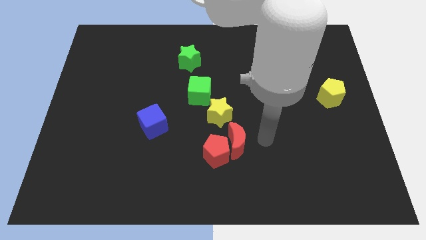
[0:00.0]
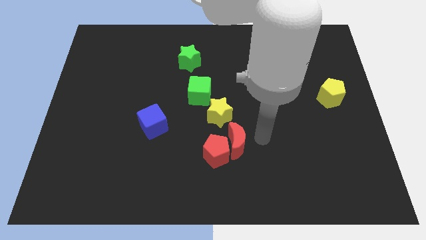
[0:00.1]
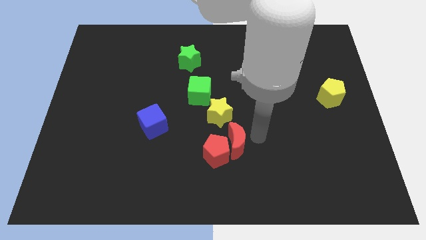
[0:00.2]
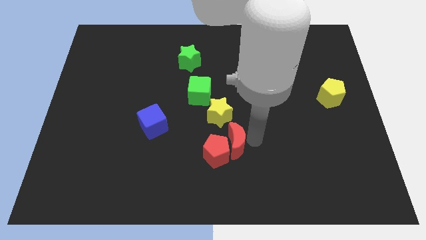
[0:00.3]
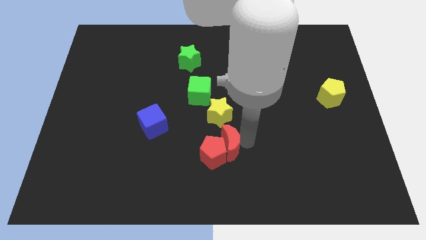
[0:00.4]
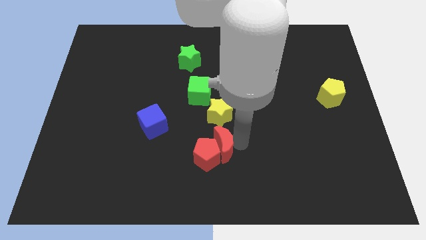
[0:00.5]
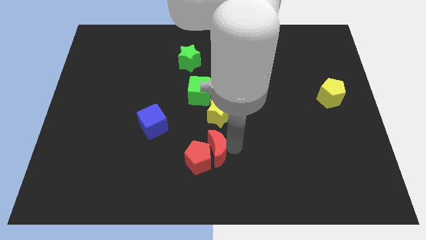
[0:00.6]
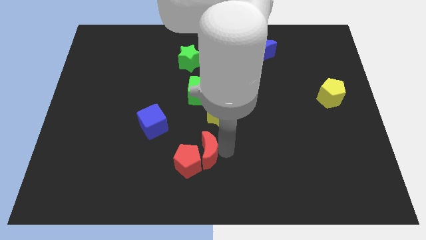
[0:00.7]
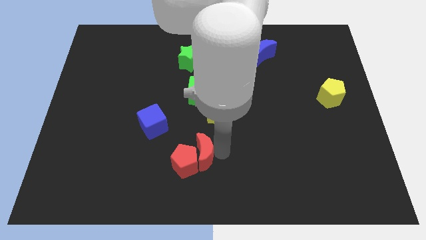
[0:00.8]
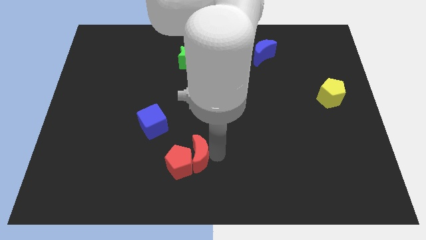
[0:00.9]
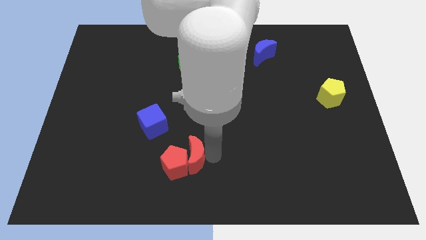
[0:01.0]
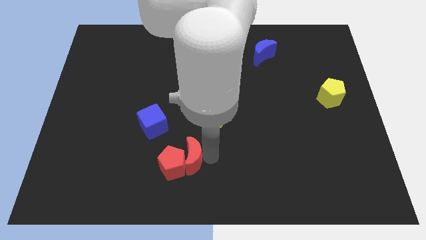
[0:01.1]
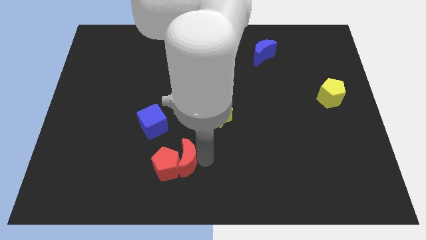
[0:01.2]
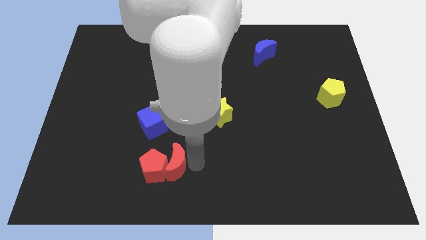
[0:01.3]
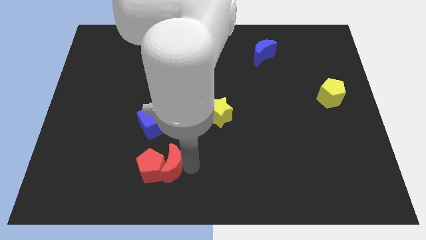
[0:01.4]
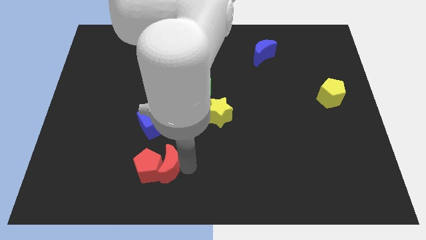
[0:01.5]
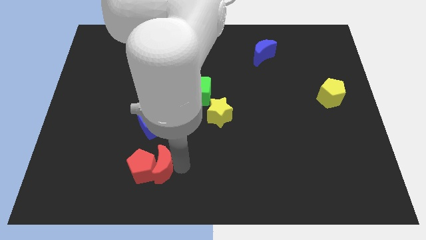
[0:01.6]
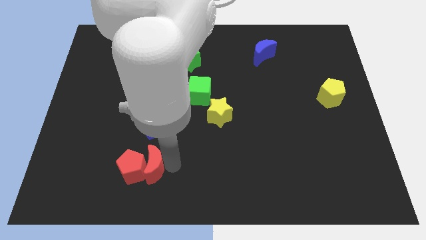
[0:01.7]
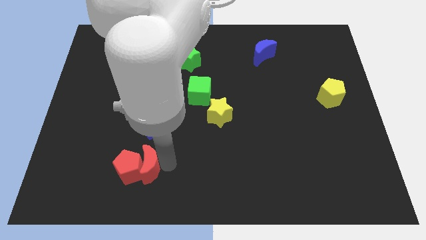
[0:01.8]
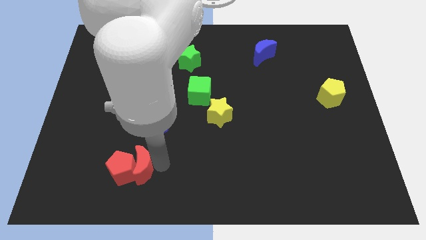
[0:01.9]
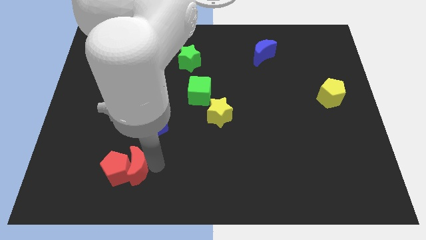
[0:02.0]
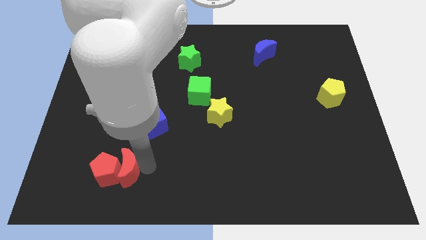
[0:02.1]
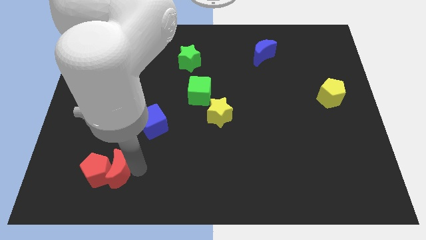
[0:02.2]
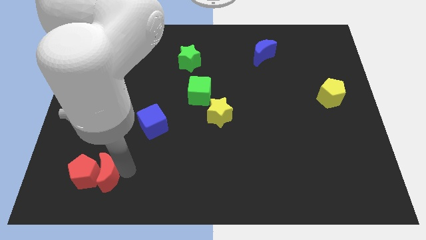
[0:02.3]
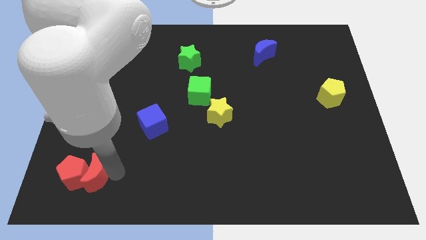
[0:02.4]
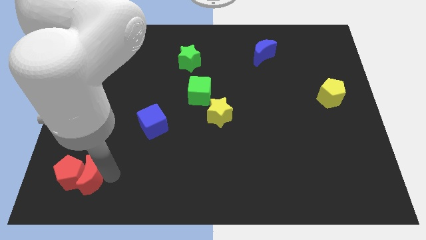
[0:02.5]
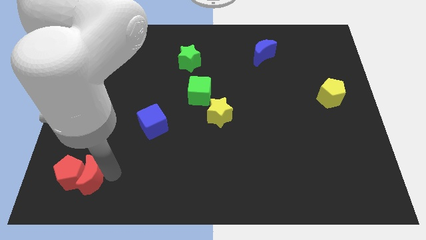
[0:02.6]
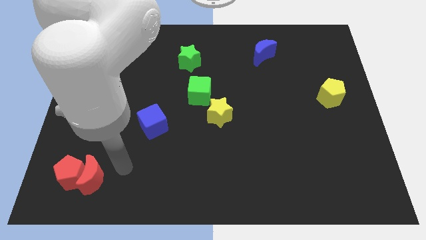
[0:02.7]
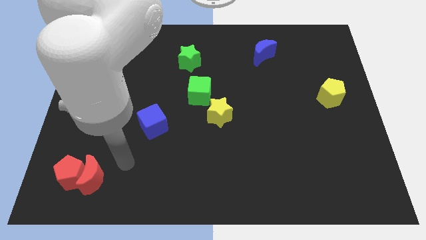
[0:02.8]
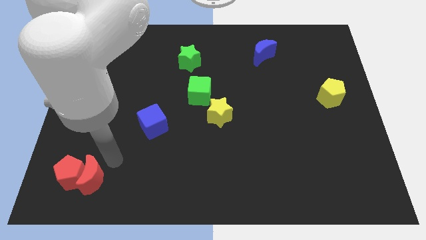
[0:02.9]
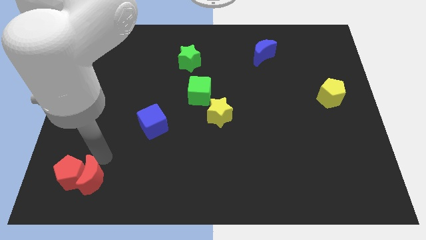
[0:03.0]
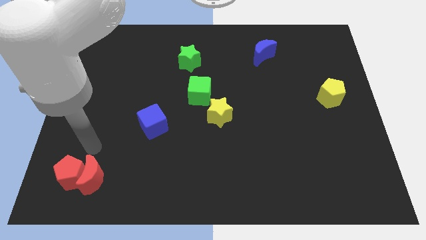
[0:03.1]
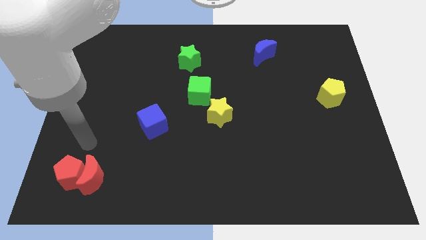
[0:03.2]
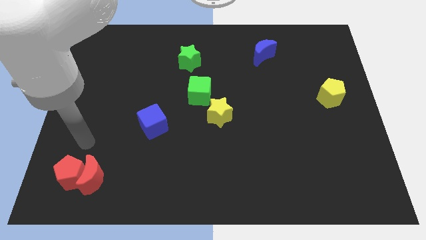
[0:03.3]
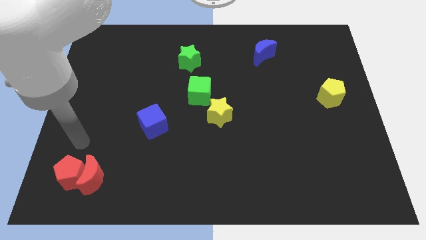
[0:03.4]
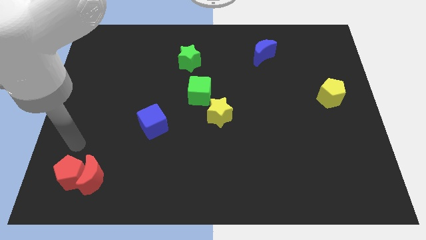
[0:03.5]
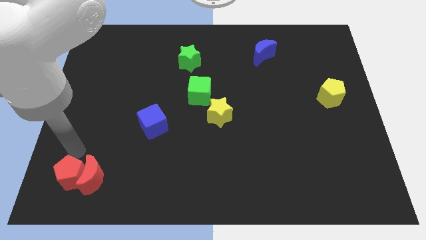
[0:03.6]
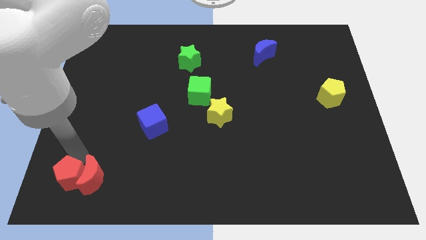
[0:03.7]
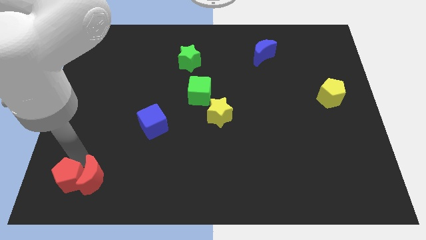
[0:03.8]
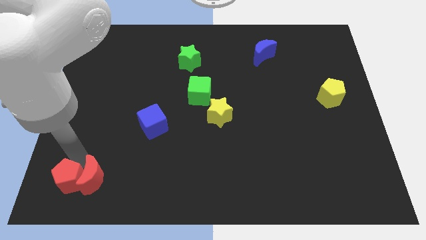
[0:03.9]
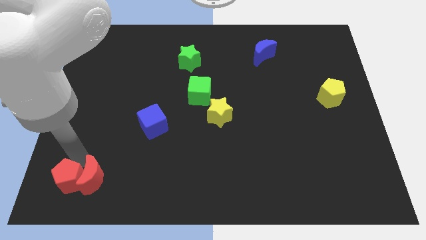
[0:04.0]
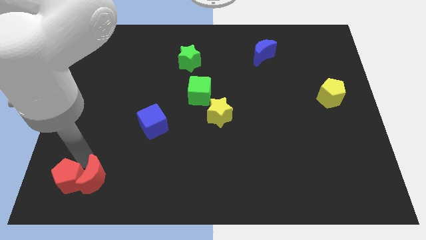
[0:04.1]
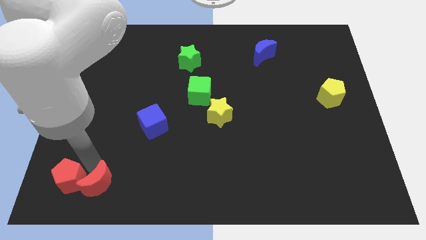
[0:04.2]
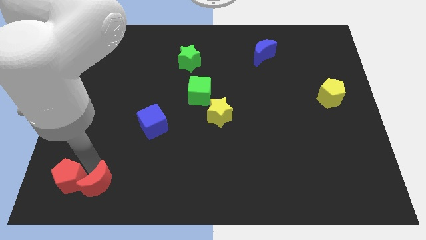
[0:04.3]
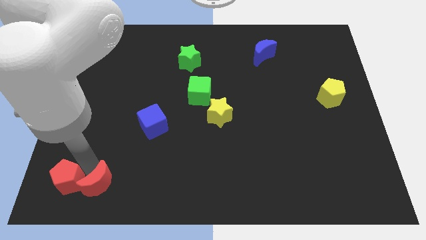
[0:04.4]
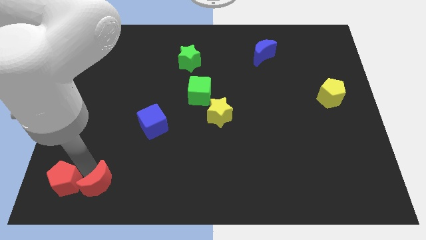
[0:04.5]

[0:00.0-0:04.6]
move the red blocks towards bottom left

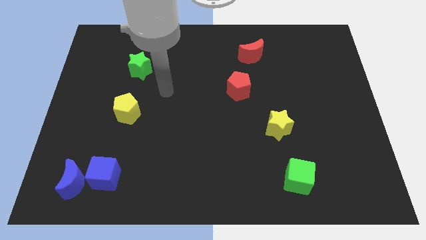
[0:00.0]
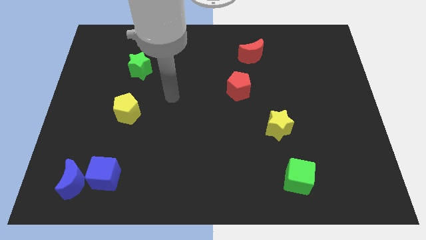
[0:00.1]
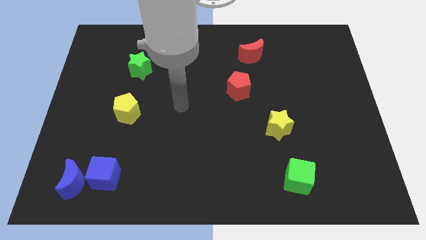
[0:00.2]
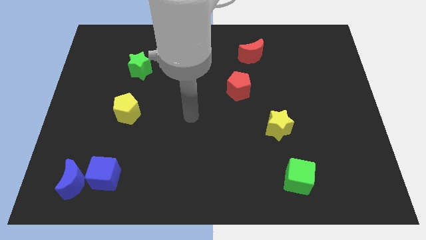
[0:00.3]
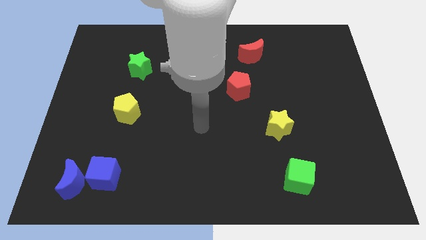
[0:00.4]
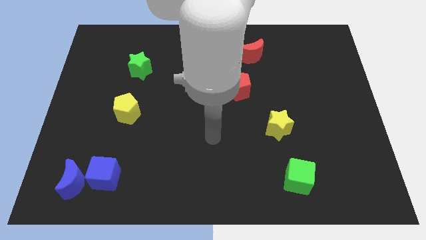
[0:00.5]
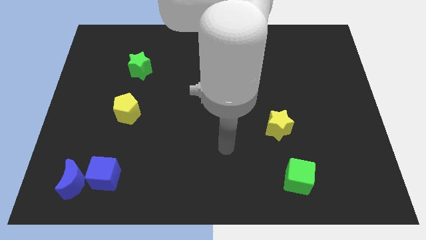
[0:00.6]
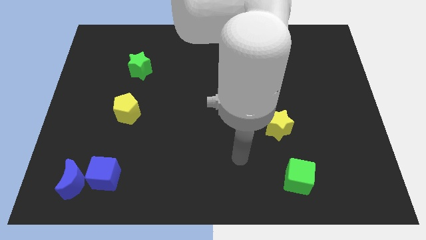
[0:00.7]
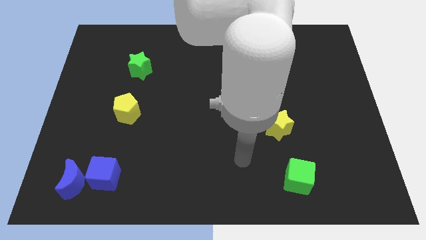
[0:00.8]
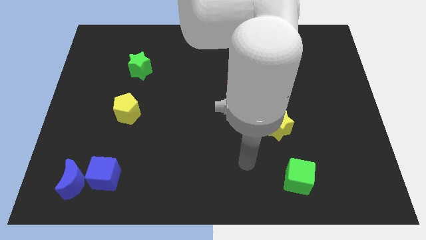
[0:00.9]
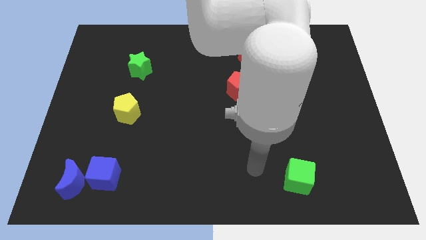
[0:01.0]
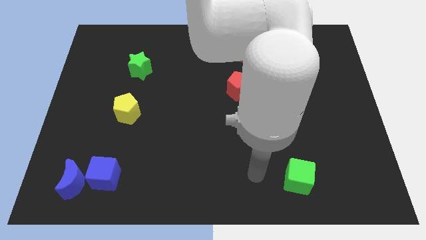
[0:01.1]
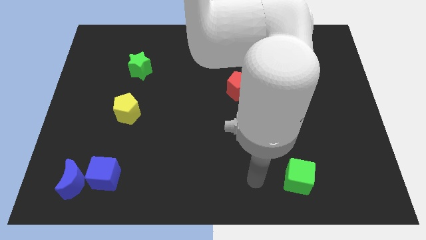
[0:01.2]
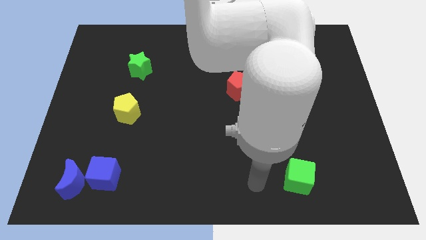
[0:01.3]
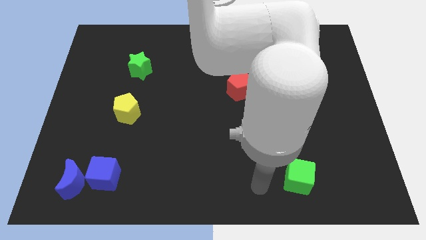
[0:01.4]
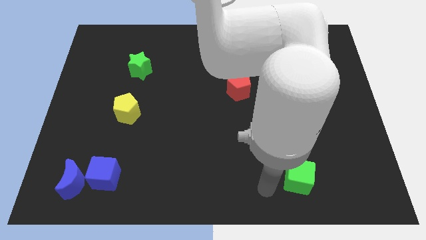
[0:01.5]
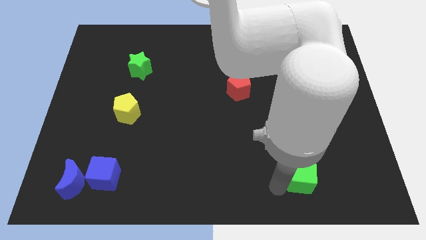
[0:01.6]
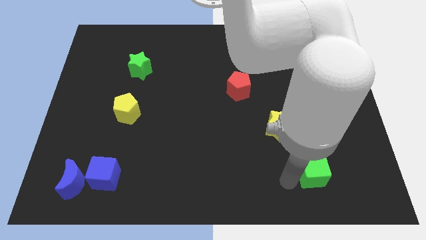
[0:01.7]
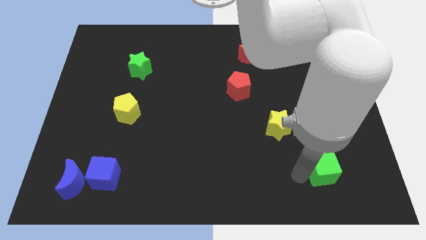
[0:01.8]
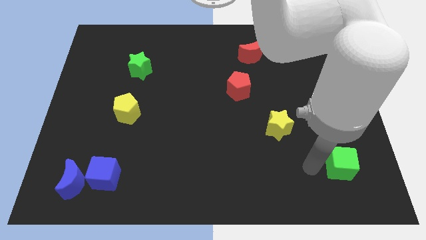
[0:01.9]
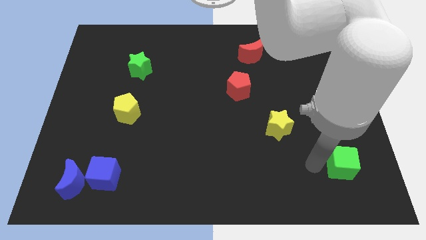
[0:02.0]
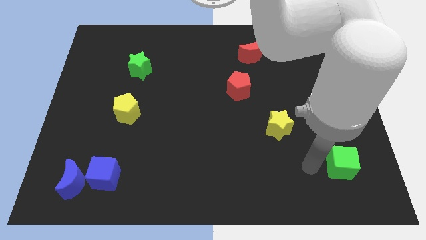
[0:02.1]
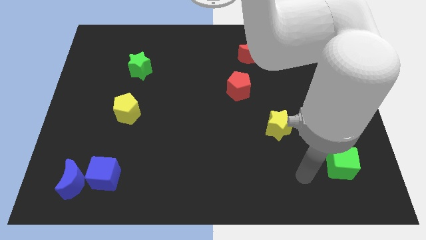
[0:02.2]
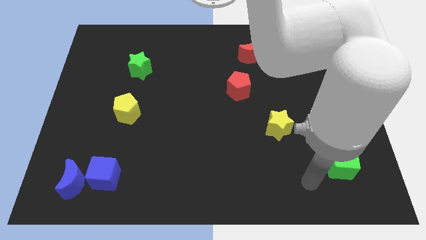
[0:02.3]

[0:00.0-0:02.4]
slightly slide the green cube to the right

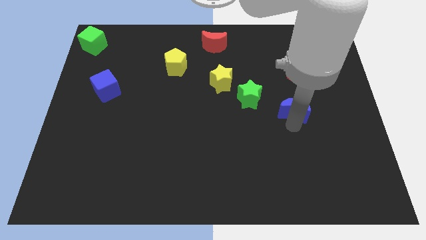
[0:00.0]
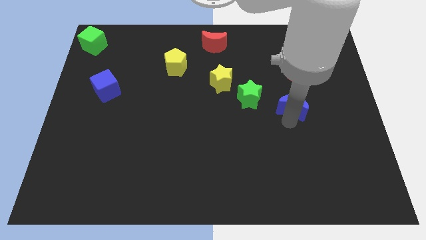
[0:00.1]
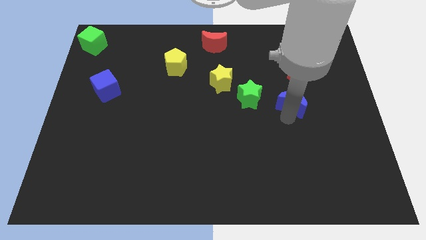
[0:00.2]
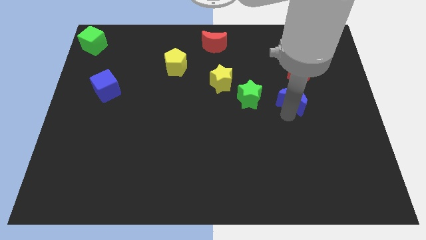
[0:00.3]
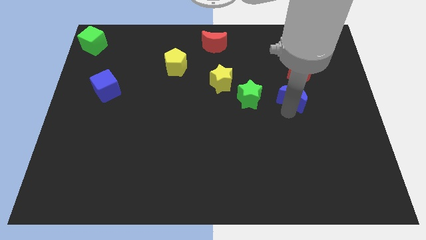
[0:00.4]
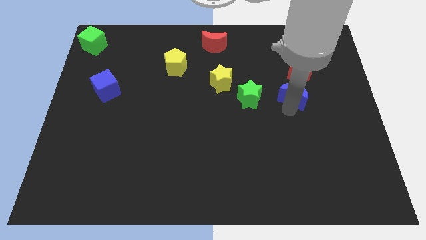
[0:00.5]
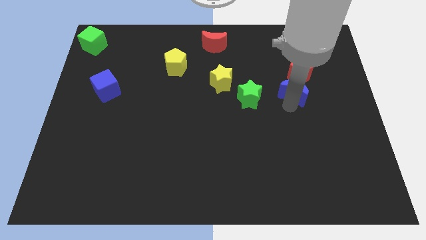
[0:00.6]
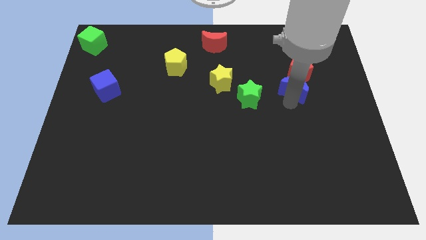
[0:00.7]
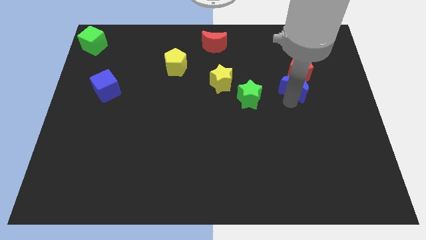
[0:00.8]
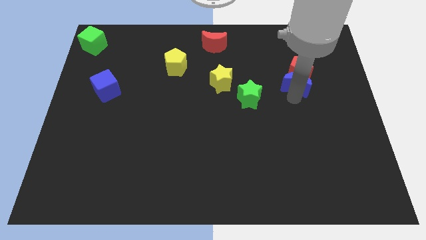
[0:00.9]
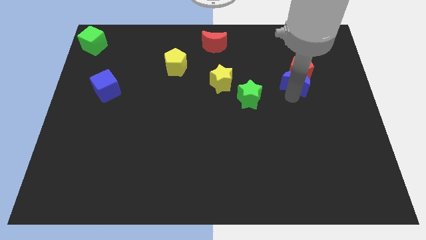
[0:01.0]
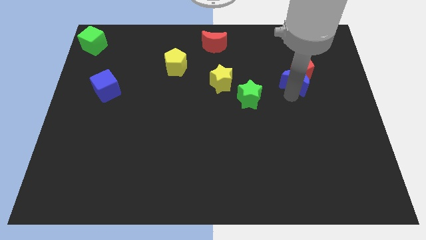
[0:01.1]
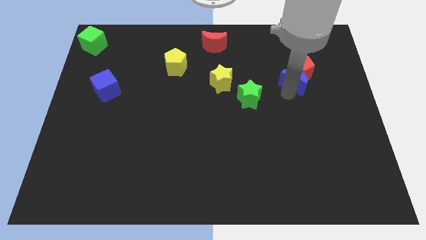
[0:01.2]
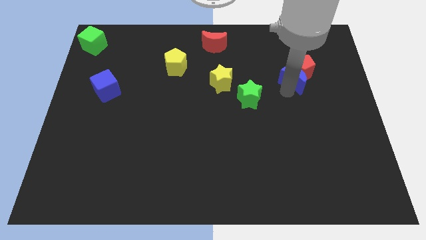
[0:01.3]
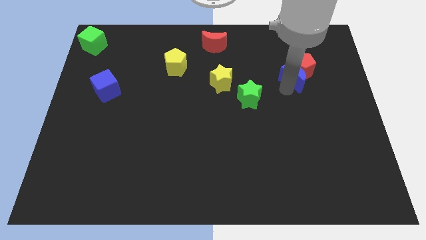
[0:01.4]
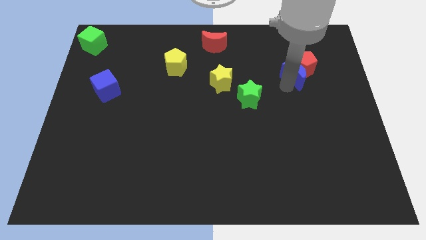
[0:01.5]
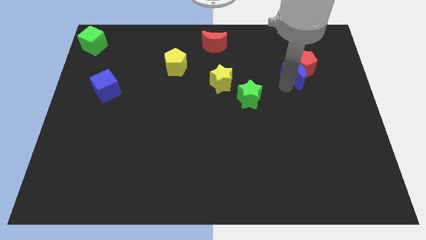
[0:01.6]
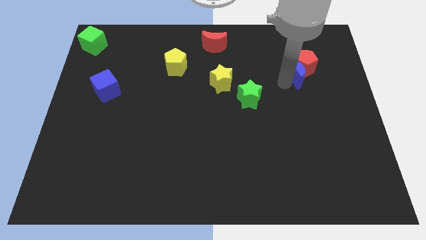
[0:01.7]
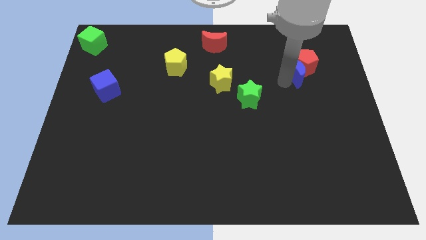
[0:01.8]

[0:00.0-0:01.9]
push the blue moon into the red pentagon

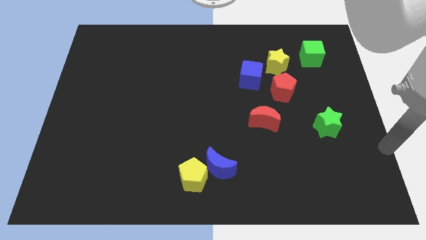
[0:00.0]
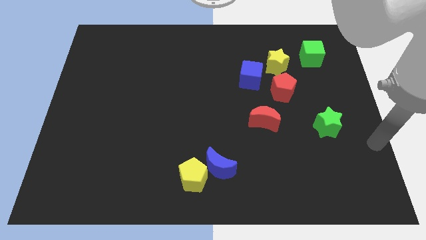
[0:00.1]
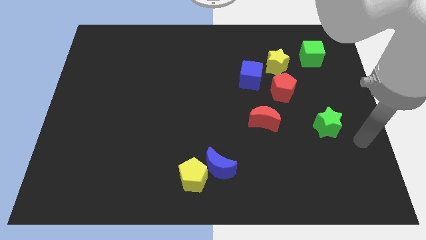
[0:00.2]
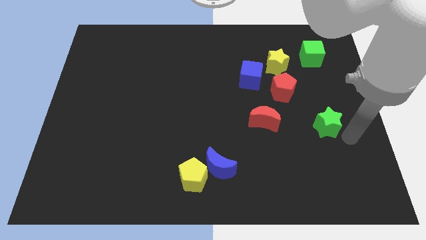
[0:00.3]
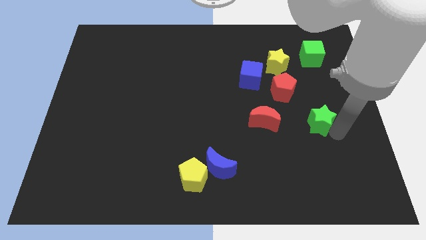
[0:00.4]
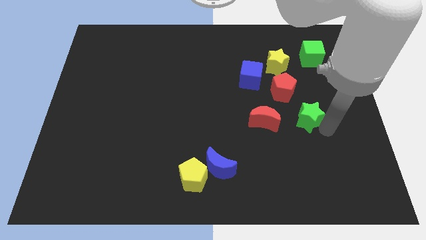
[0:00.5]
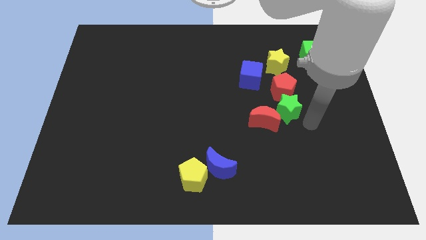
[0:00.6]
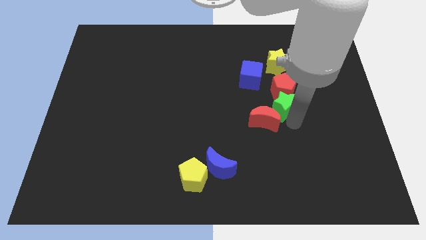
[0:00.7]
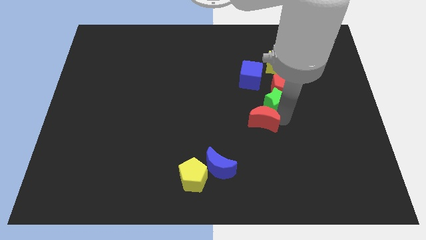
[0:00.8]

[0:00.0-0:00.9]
place the green star in between the red blocks
